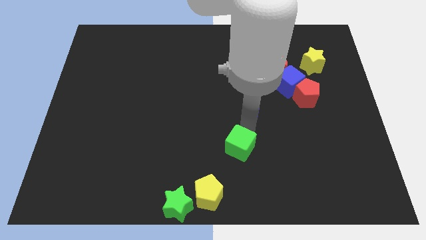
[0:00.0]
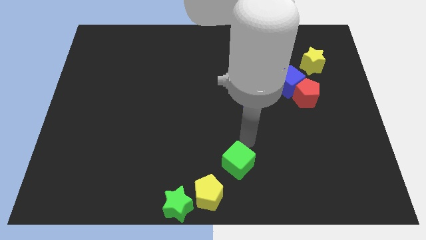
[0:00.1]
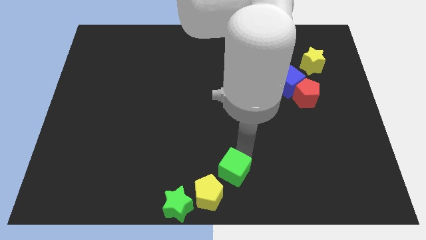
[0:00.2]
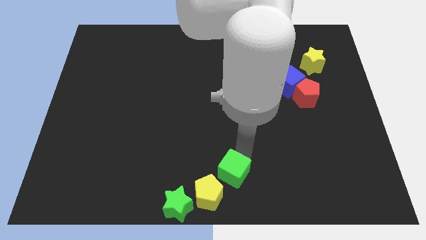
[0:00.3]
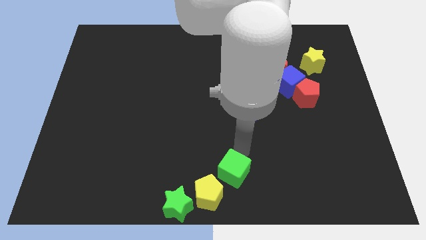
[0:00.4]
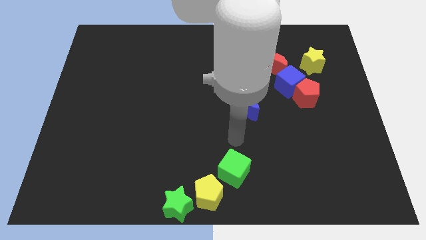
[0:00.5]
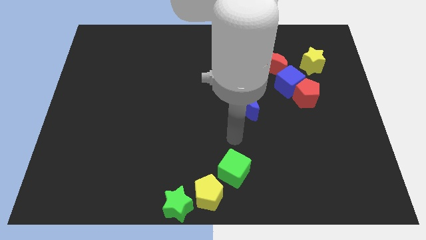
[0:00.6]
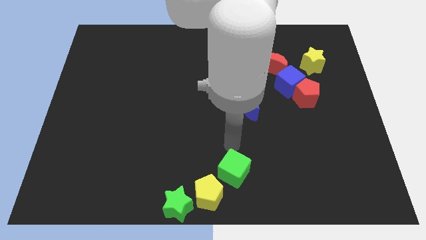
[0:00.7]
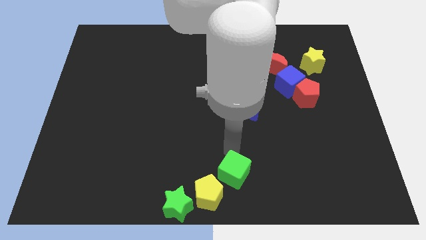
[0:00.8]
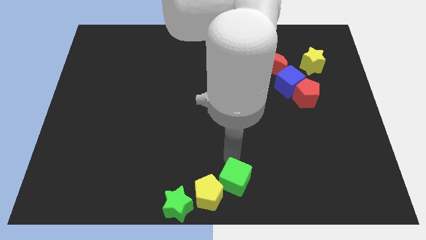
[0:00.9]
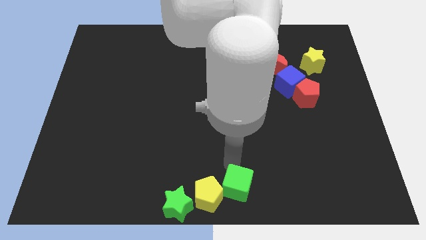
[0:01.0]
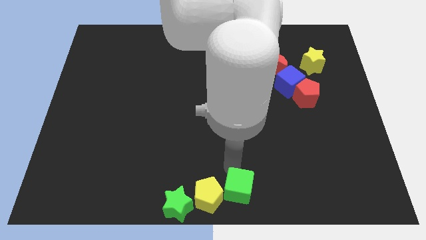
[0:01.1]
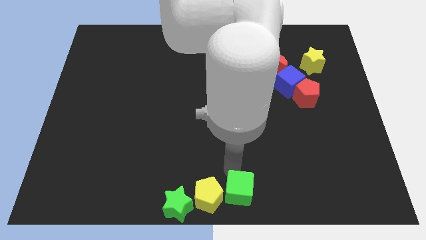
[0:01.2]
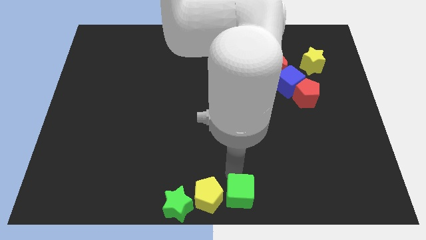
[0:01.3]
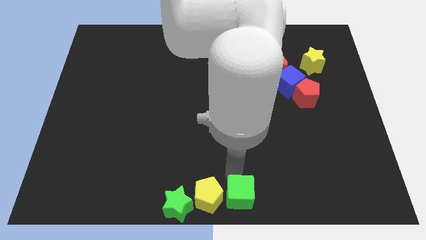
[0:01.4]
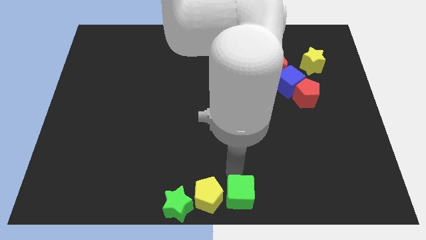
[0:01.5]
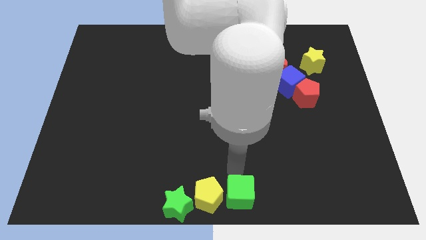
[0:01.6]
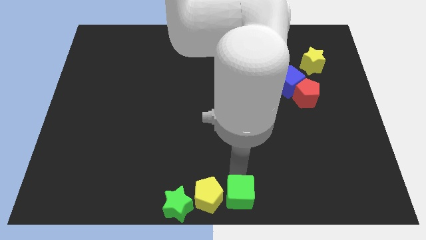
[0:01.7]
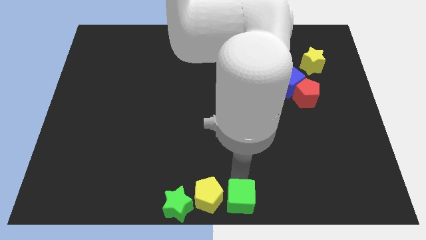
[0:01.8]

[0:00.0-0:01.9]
move the green cube to the right of the yellow pentagon

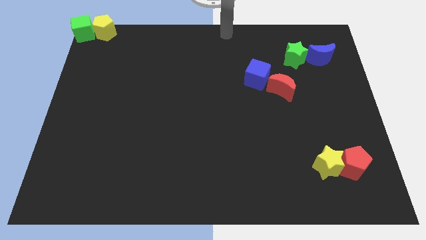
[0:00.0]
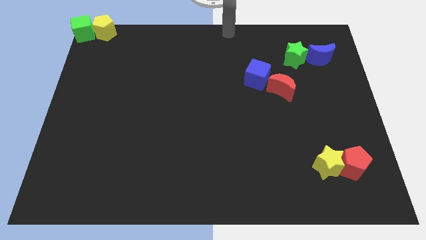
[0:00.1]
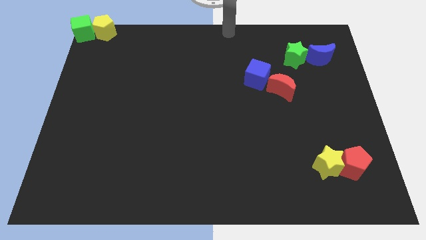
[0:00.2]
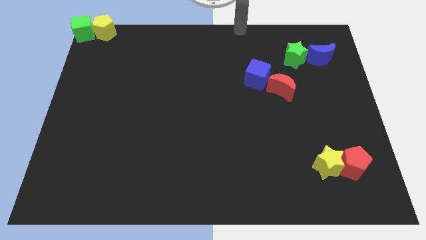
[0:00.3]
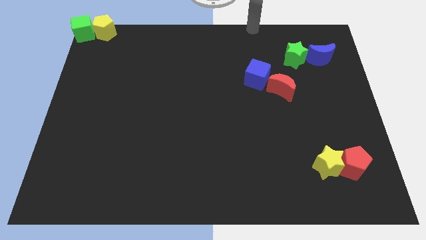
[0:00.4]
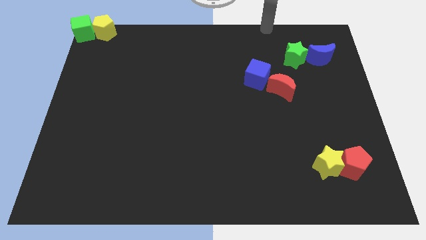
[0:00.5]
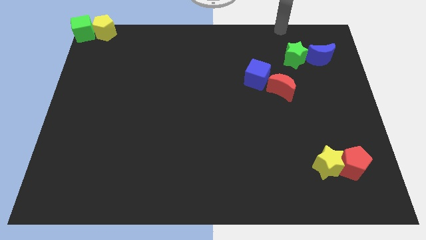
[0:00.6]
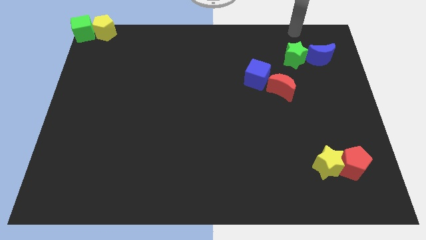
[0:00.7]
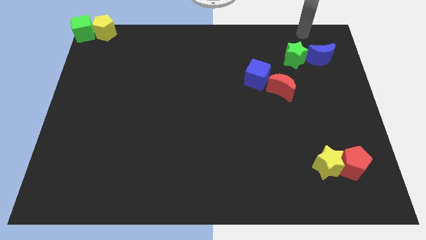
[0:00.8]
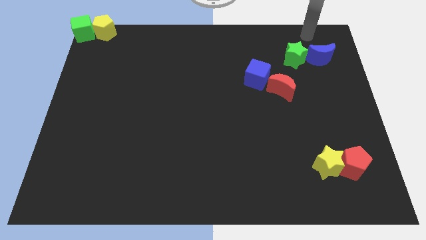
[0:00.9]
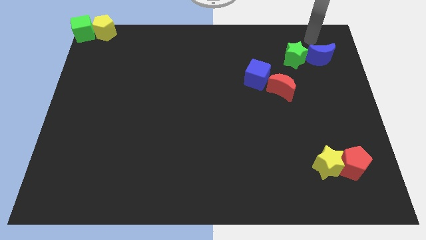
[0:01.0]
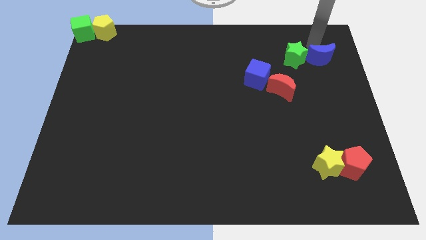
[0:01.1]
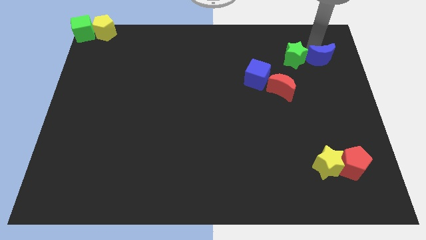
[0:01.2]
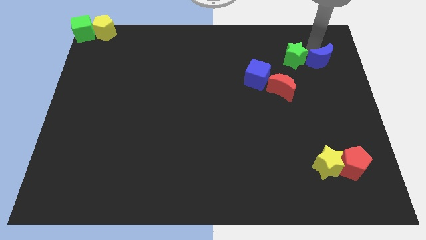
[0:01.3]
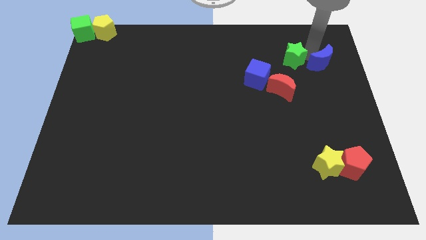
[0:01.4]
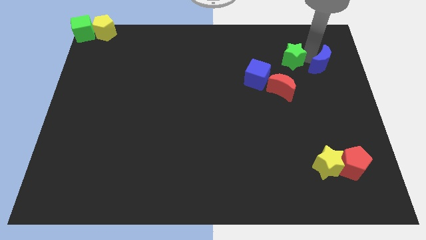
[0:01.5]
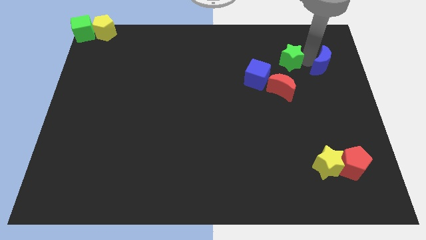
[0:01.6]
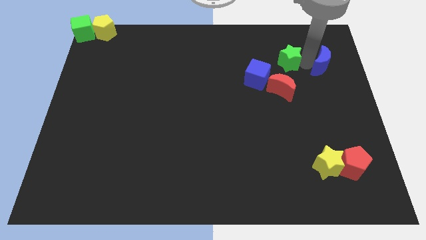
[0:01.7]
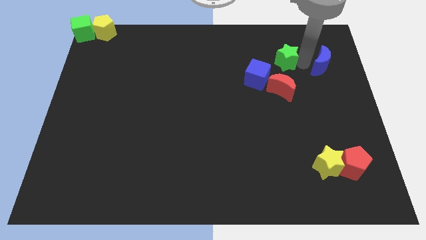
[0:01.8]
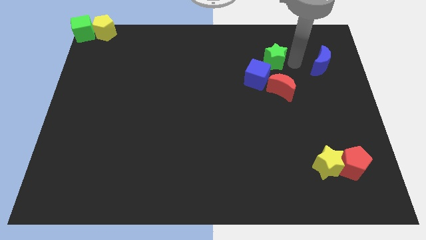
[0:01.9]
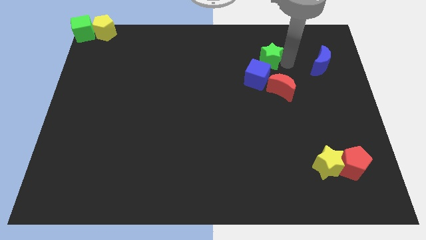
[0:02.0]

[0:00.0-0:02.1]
separate green star and blue moon

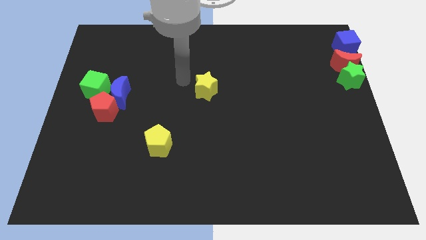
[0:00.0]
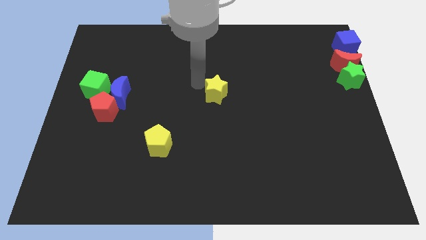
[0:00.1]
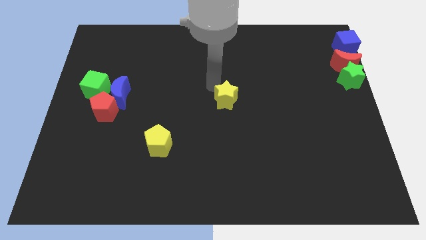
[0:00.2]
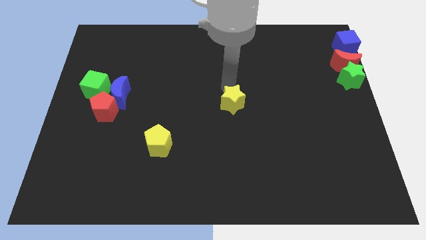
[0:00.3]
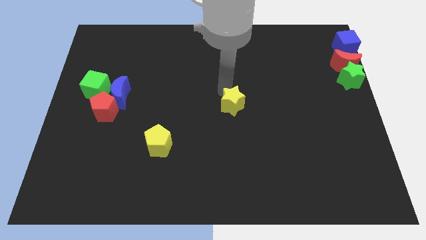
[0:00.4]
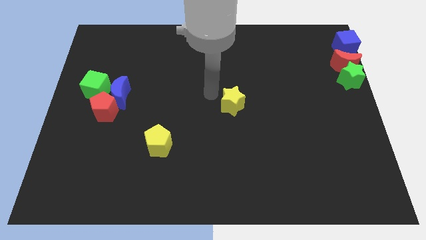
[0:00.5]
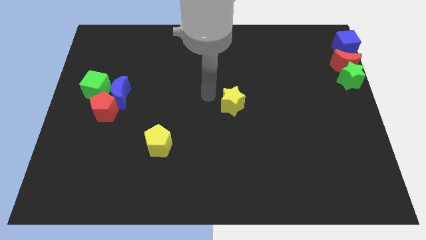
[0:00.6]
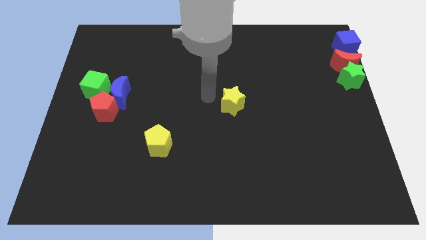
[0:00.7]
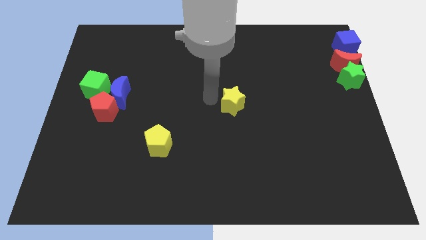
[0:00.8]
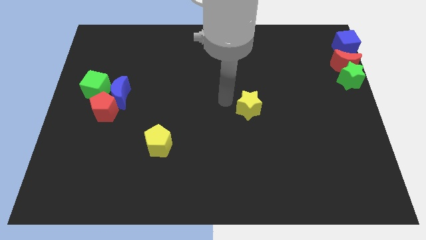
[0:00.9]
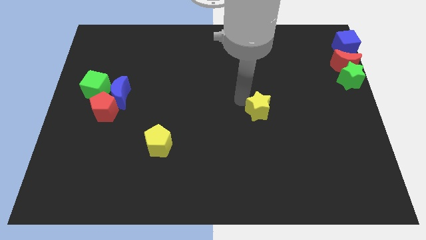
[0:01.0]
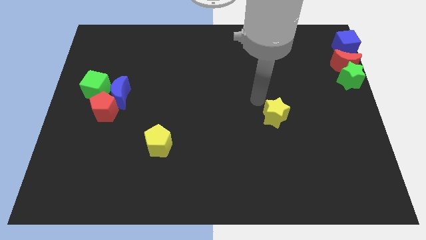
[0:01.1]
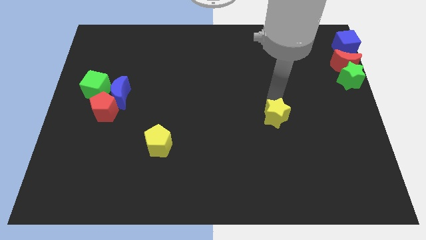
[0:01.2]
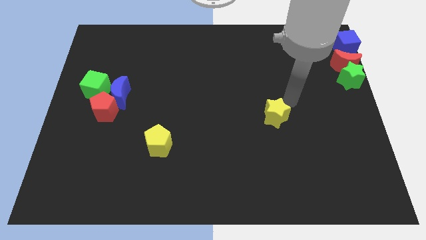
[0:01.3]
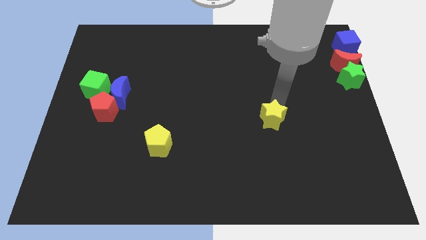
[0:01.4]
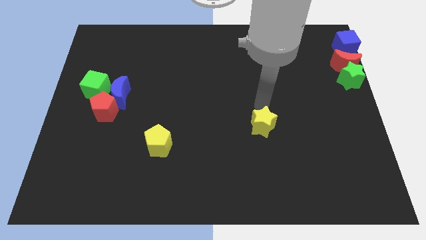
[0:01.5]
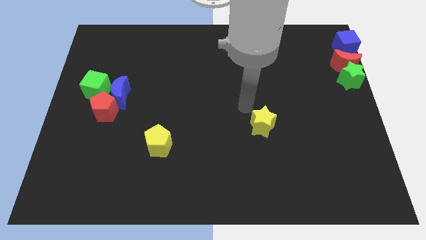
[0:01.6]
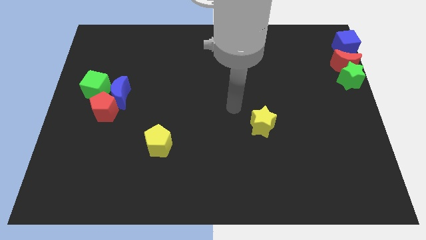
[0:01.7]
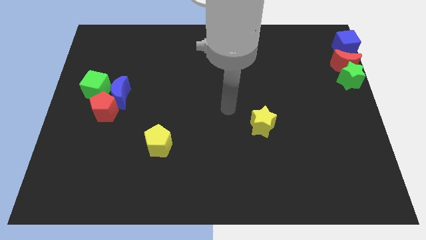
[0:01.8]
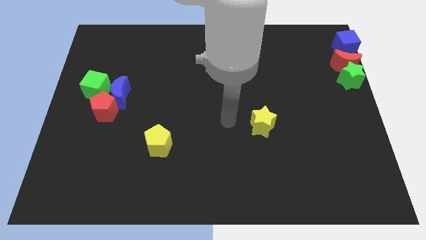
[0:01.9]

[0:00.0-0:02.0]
slightly push the yellow star towards the bottom right side of the board

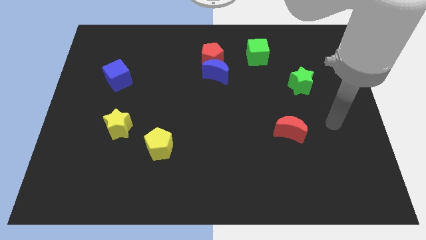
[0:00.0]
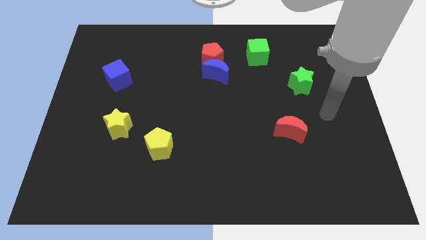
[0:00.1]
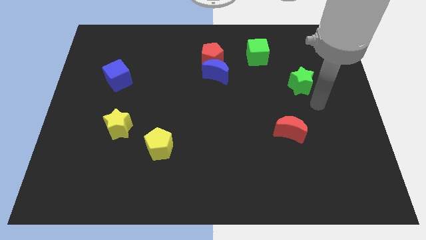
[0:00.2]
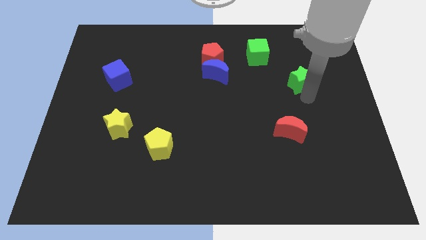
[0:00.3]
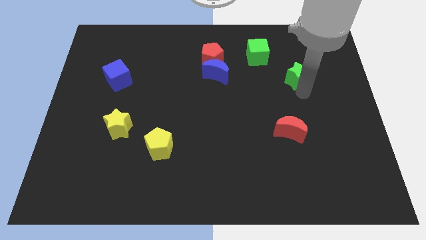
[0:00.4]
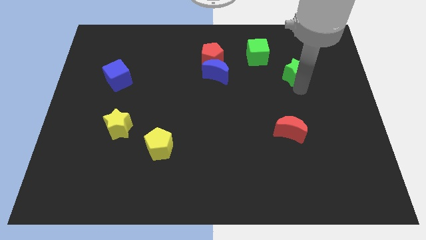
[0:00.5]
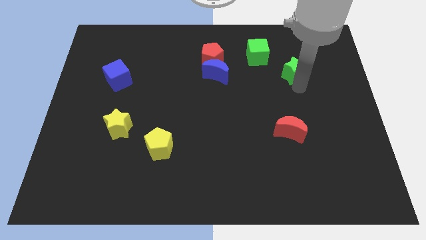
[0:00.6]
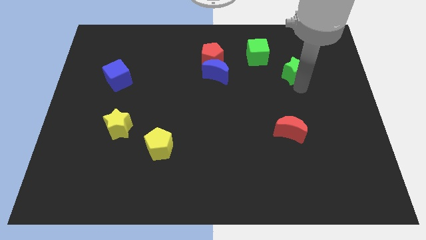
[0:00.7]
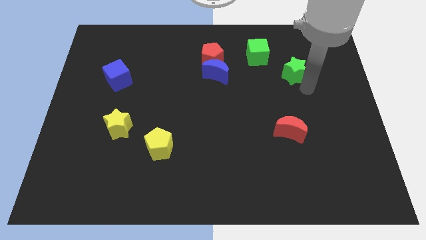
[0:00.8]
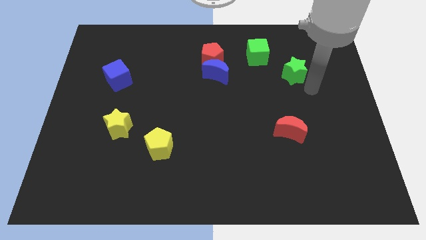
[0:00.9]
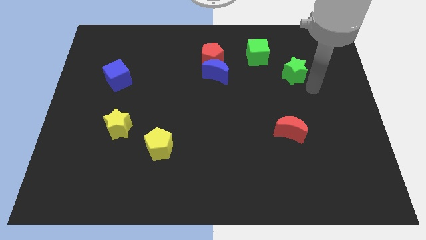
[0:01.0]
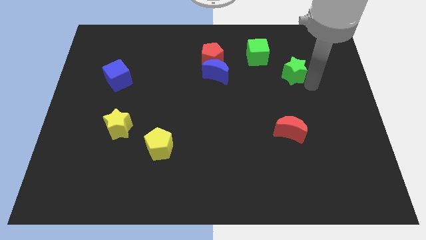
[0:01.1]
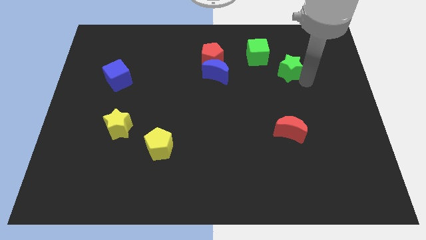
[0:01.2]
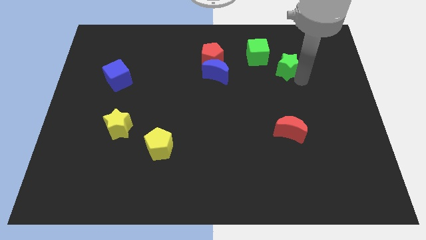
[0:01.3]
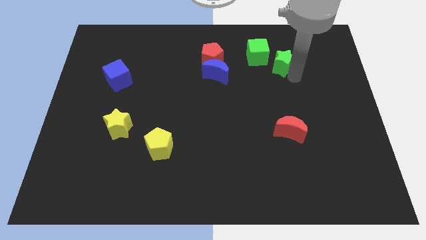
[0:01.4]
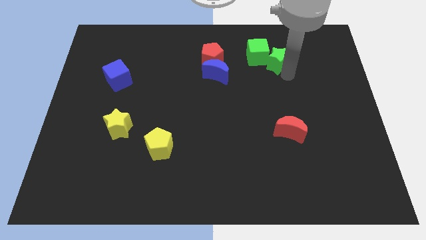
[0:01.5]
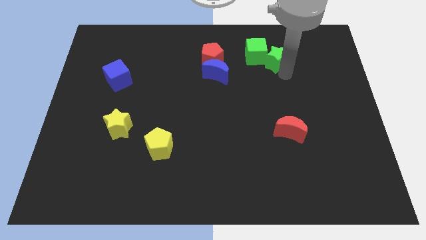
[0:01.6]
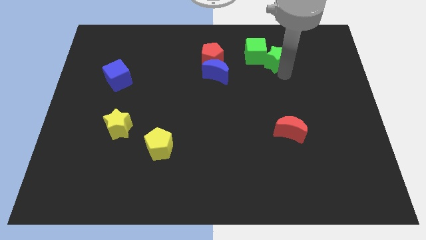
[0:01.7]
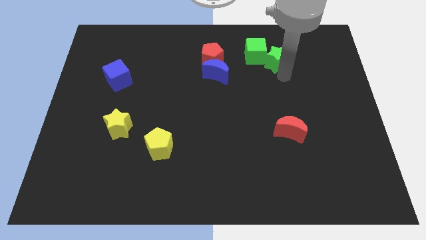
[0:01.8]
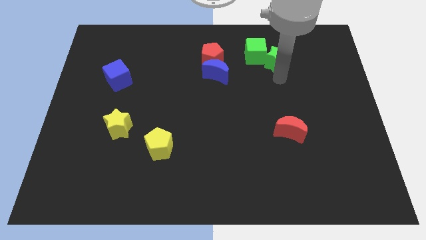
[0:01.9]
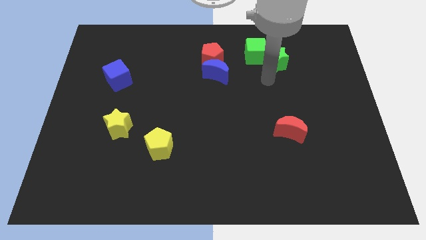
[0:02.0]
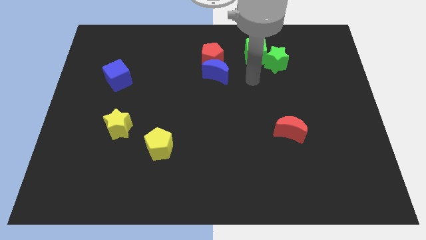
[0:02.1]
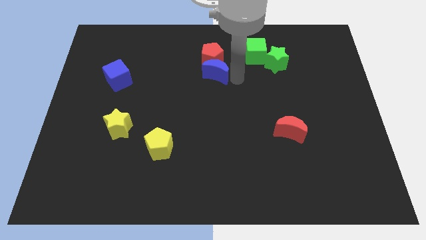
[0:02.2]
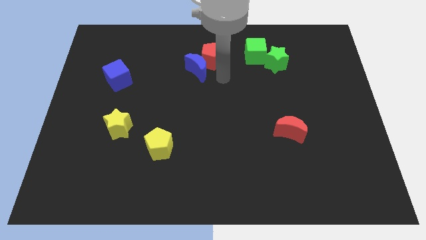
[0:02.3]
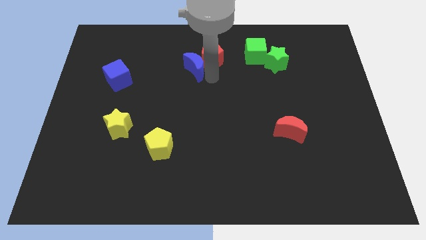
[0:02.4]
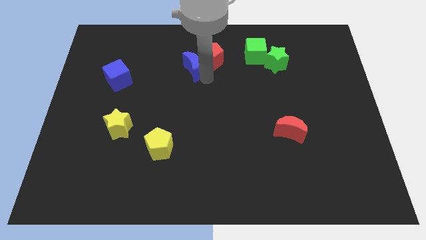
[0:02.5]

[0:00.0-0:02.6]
move the green star into the green cube

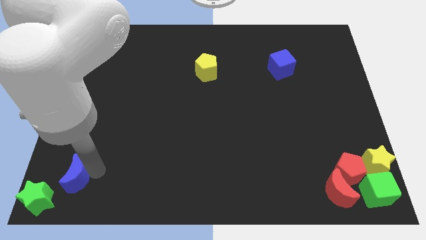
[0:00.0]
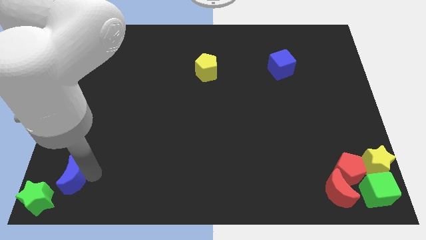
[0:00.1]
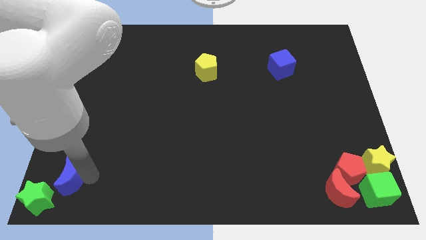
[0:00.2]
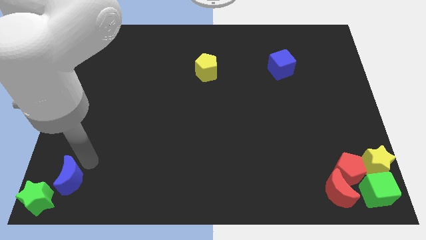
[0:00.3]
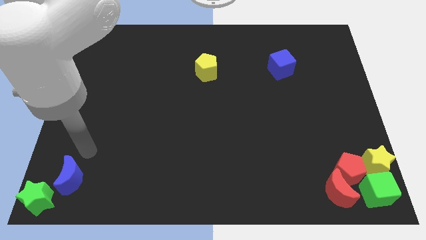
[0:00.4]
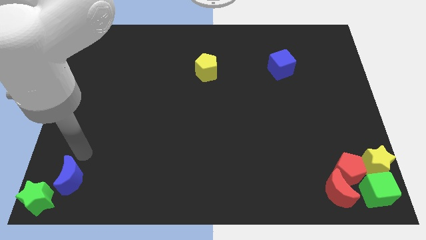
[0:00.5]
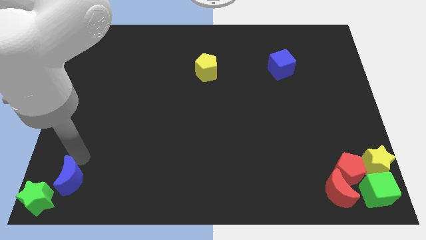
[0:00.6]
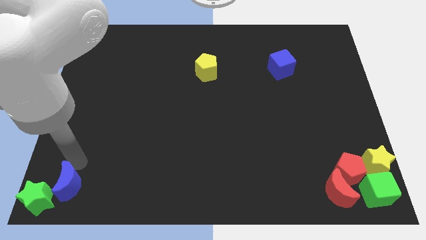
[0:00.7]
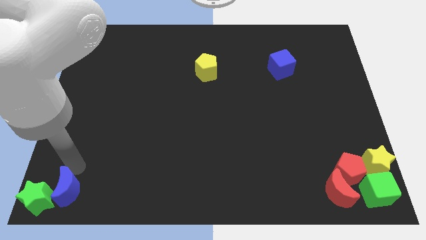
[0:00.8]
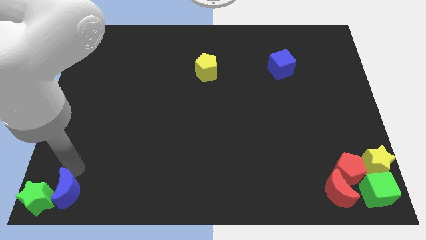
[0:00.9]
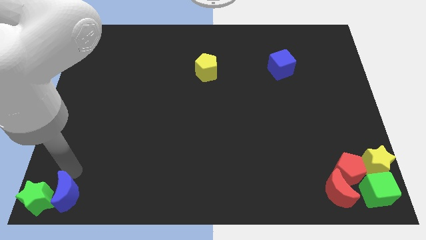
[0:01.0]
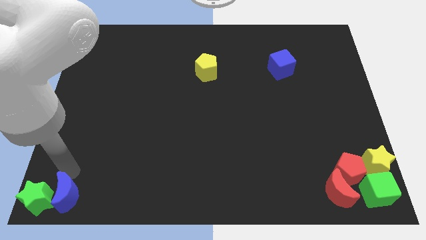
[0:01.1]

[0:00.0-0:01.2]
move the blue crescent to the right of the green star
